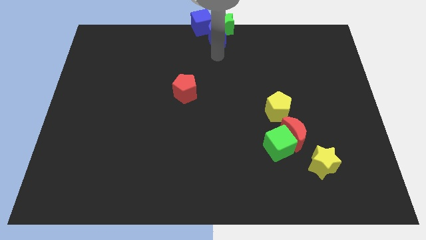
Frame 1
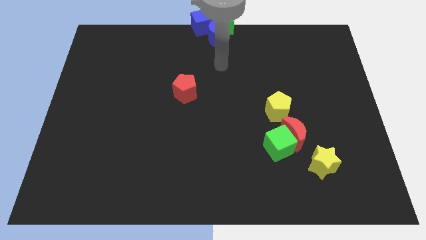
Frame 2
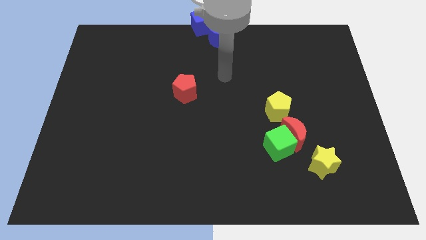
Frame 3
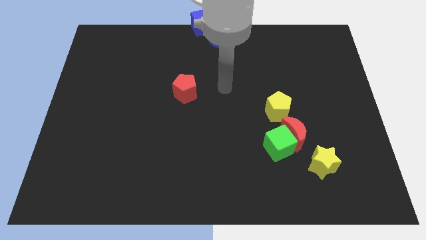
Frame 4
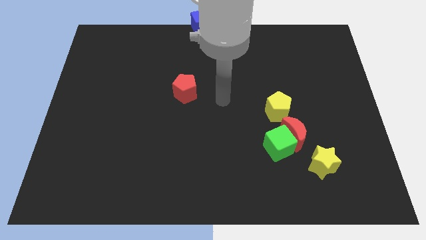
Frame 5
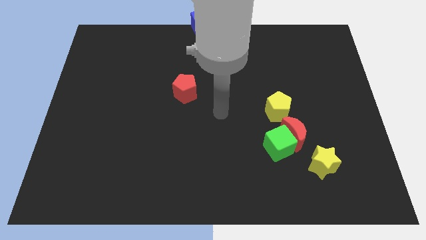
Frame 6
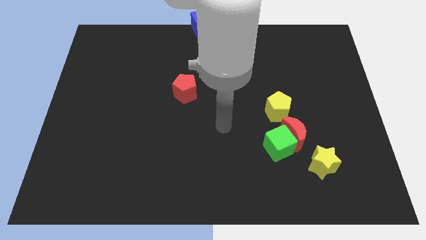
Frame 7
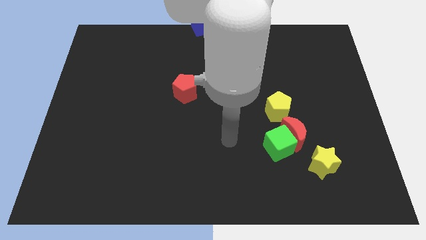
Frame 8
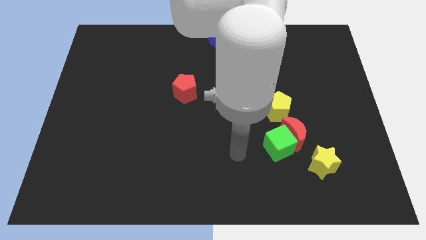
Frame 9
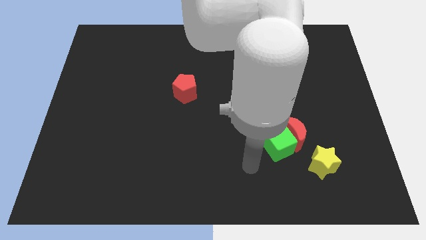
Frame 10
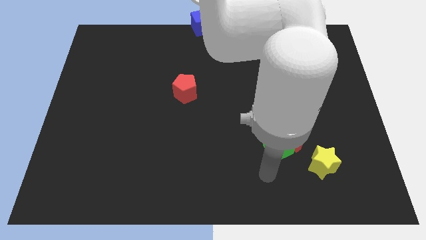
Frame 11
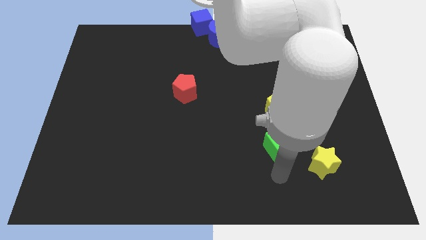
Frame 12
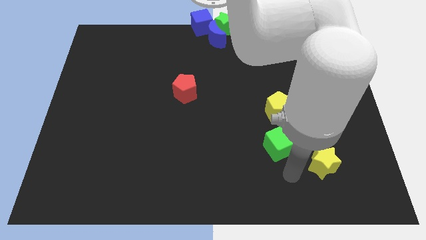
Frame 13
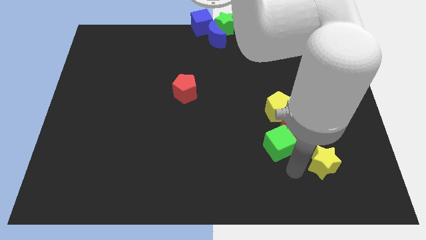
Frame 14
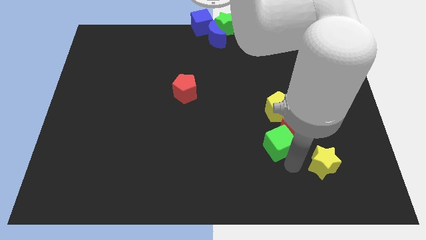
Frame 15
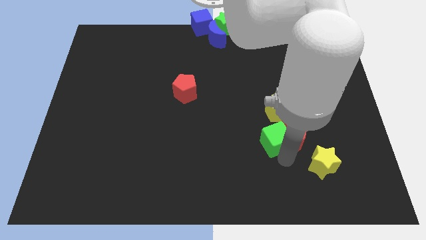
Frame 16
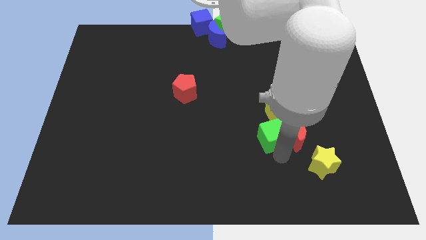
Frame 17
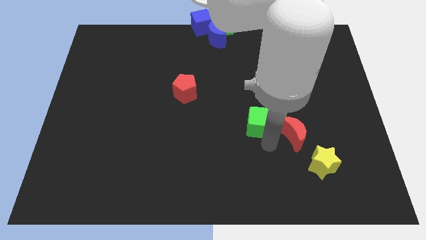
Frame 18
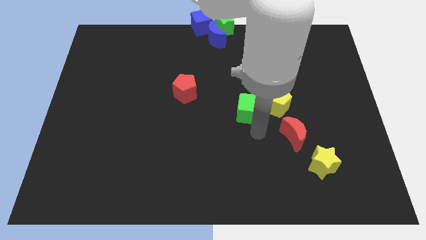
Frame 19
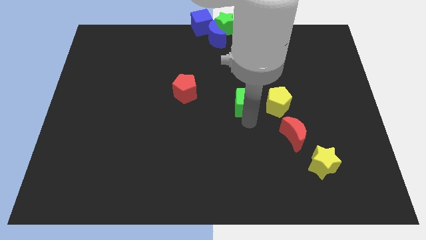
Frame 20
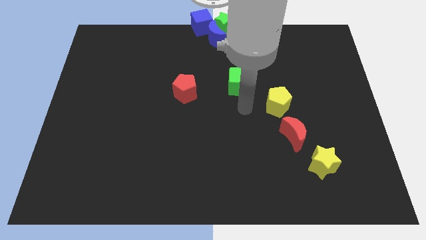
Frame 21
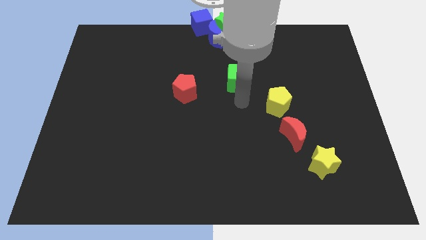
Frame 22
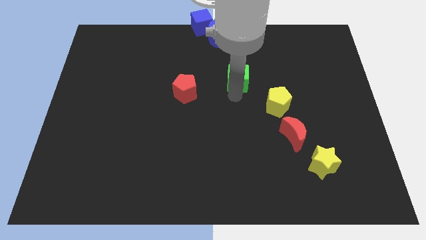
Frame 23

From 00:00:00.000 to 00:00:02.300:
place the green cube at right side of the red pentagon

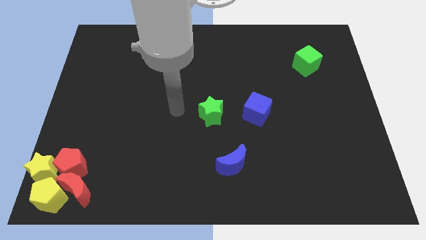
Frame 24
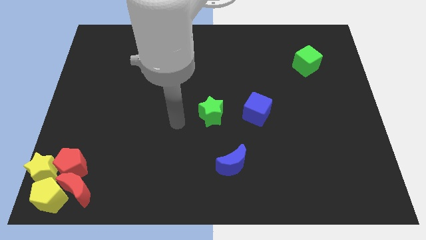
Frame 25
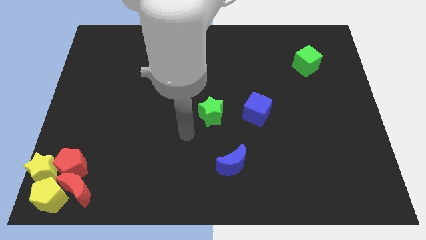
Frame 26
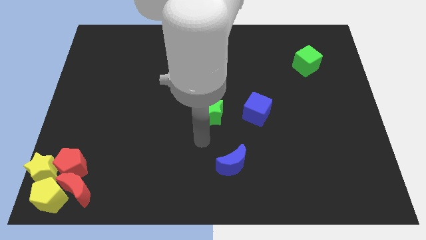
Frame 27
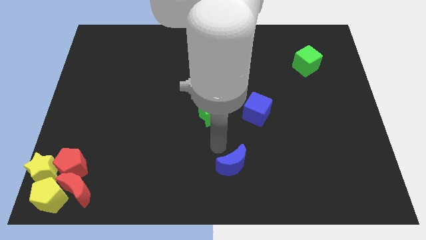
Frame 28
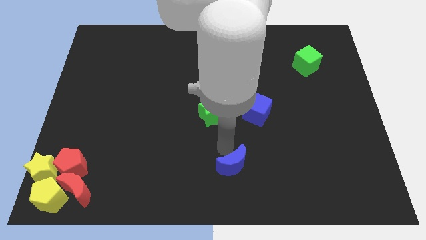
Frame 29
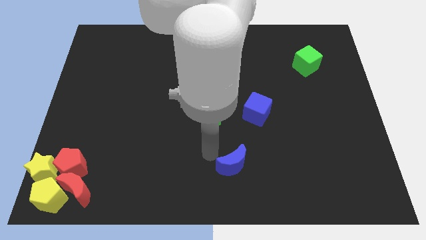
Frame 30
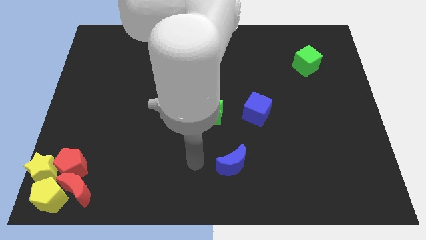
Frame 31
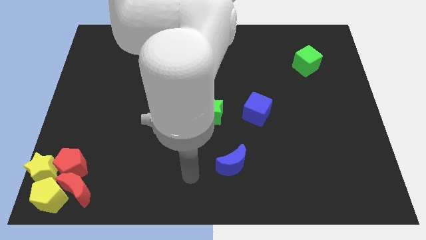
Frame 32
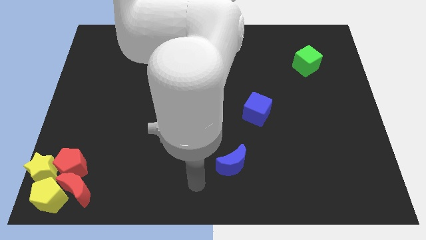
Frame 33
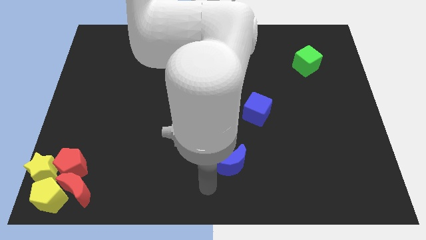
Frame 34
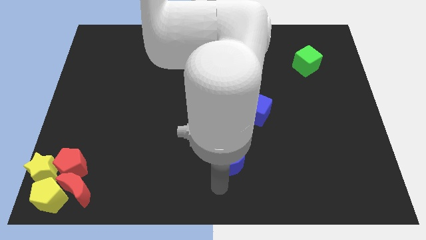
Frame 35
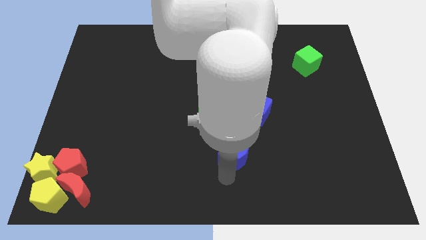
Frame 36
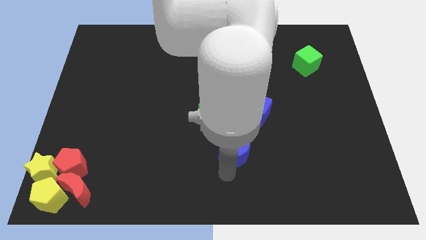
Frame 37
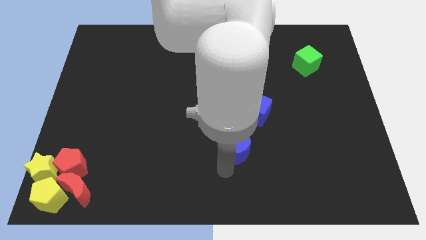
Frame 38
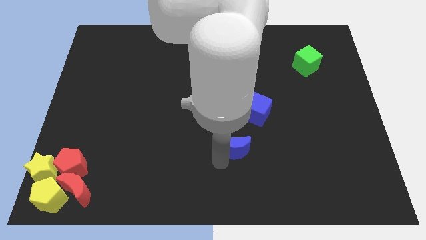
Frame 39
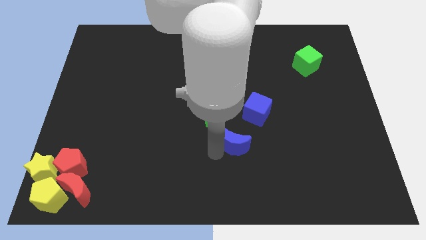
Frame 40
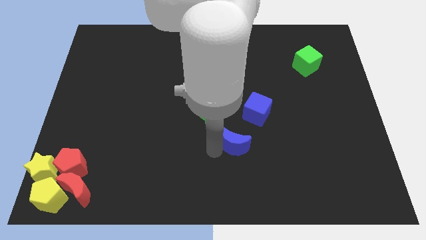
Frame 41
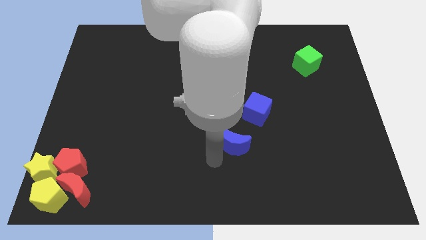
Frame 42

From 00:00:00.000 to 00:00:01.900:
push the blue moon slightly up

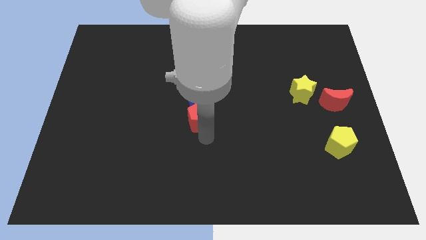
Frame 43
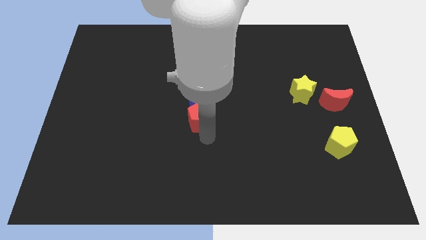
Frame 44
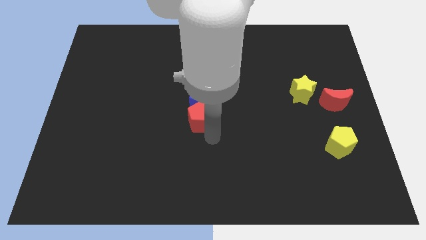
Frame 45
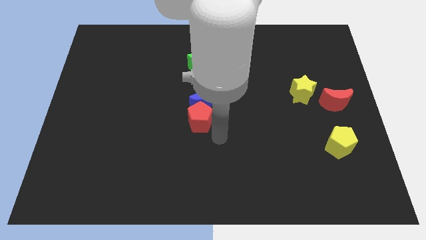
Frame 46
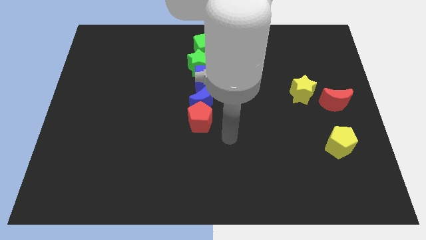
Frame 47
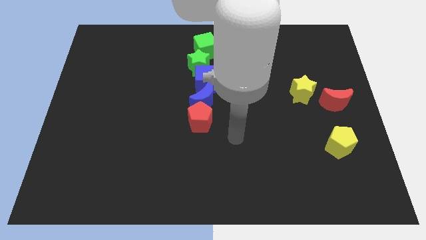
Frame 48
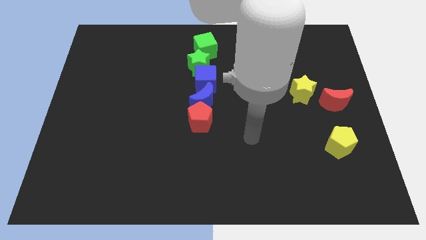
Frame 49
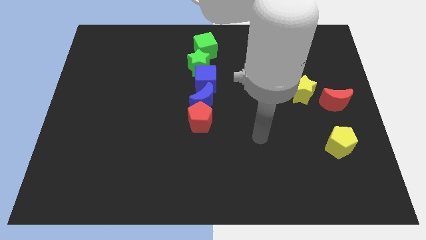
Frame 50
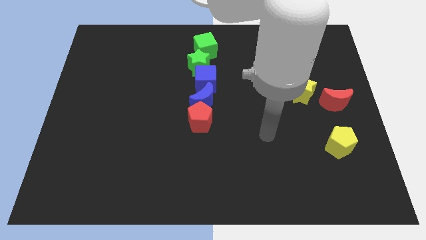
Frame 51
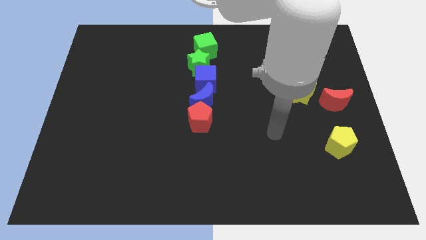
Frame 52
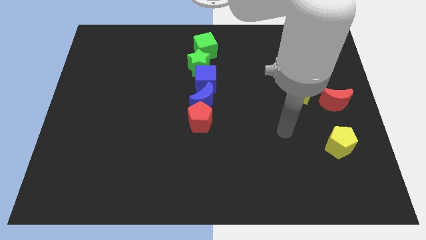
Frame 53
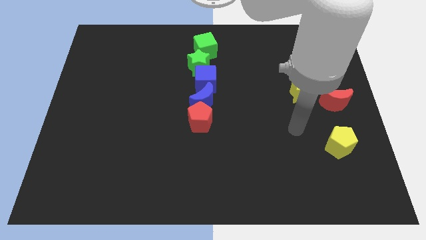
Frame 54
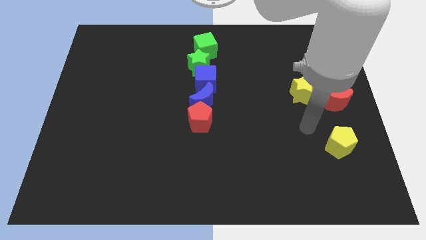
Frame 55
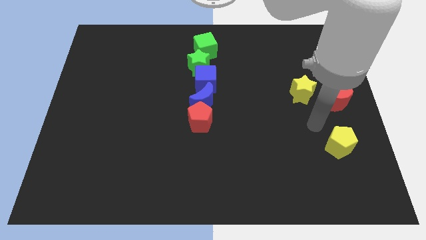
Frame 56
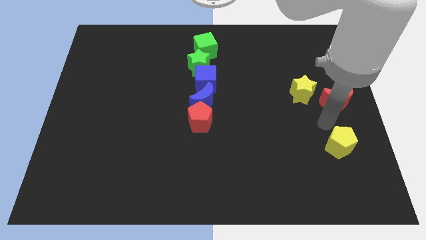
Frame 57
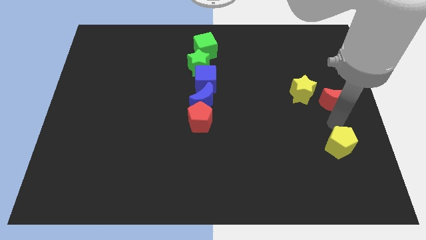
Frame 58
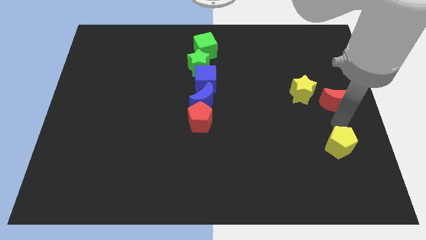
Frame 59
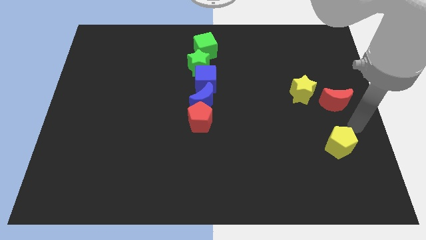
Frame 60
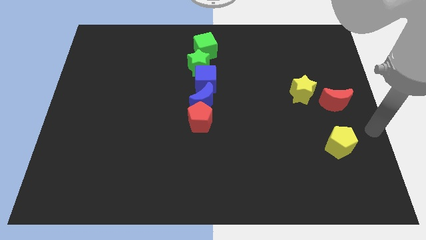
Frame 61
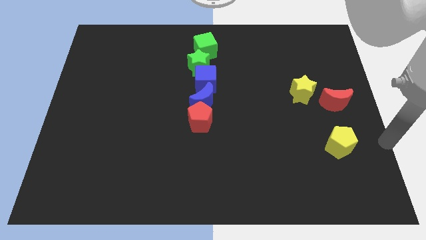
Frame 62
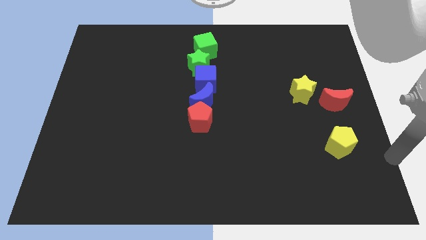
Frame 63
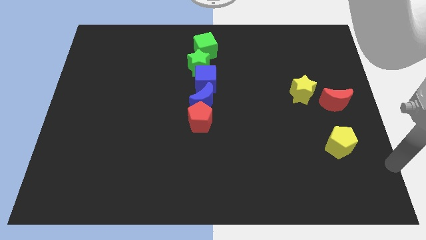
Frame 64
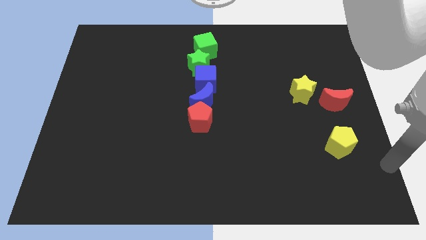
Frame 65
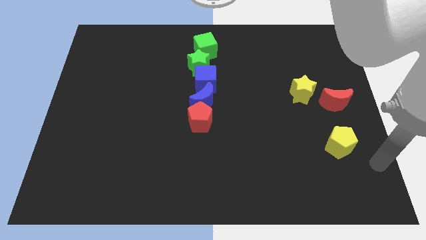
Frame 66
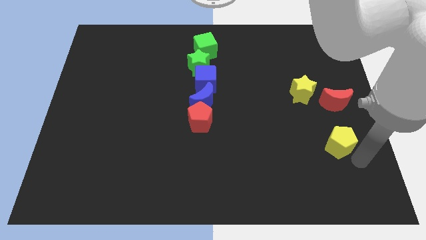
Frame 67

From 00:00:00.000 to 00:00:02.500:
move away from the red pentagon

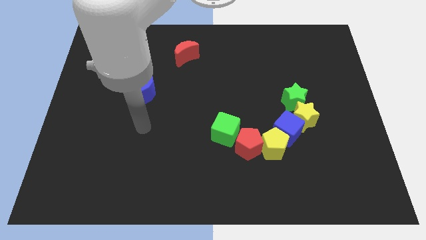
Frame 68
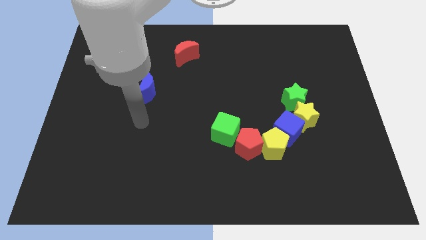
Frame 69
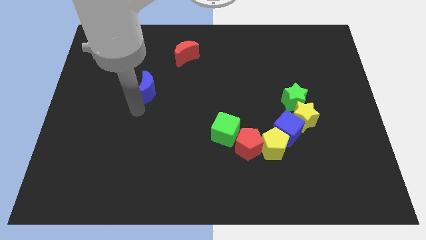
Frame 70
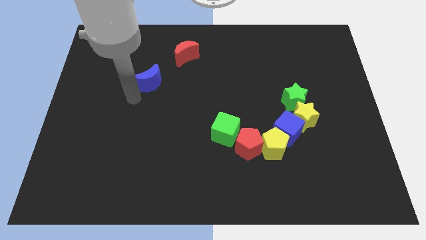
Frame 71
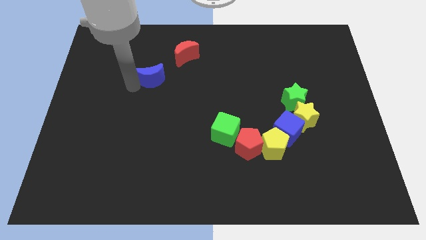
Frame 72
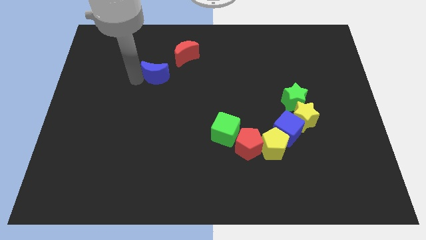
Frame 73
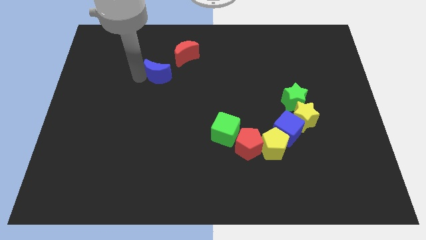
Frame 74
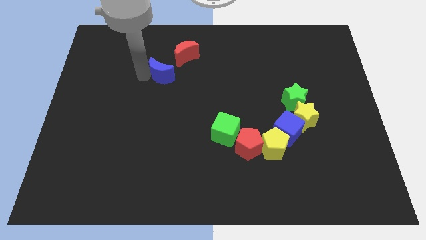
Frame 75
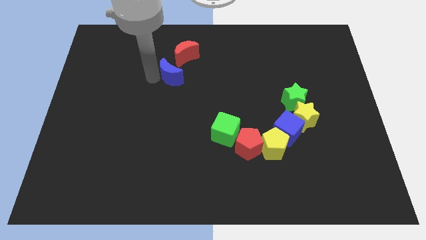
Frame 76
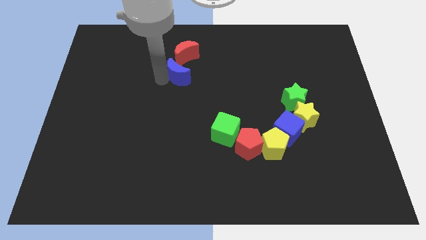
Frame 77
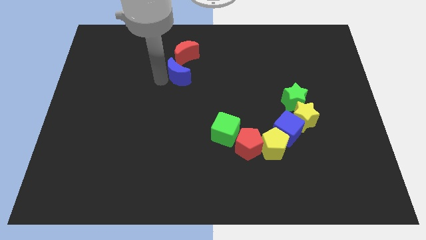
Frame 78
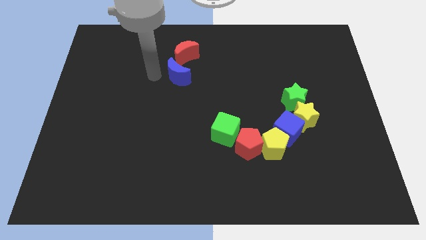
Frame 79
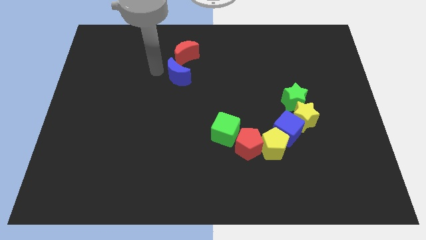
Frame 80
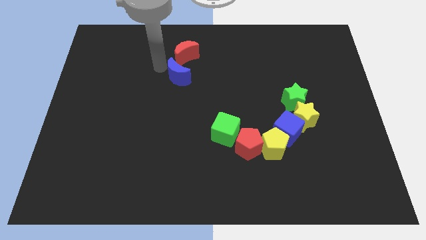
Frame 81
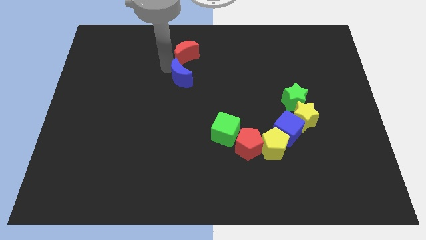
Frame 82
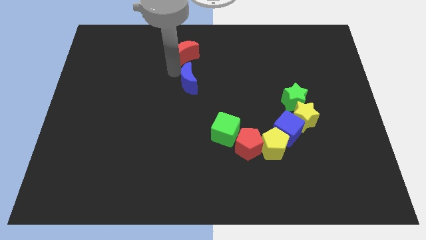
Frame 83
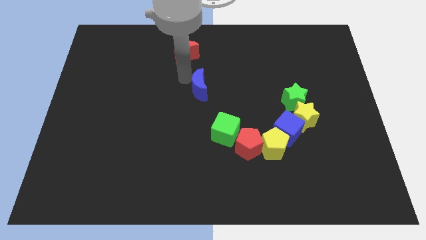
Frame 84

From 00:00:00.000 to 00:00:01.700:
move the blue crescent below the red crescent

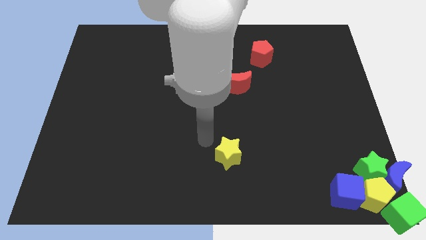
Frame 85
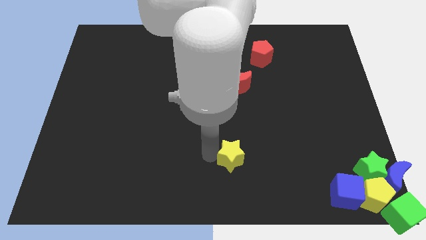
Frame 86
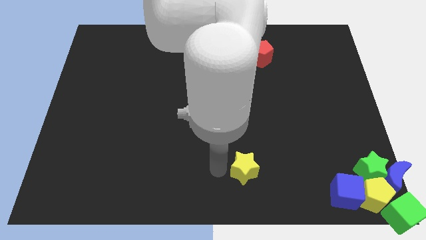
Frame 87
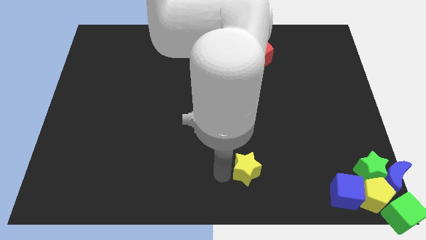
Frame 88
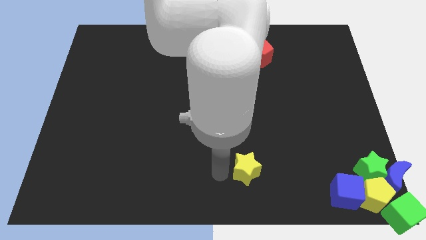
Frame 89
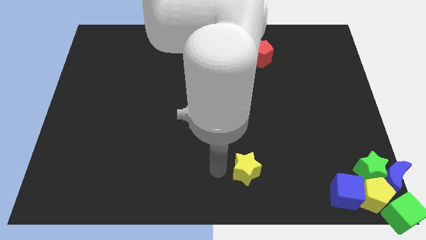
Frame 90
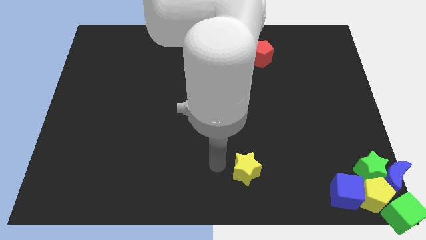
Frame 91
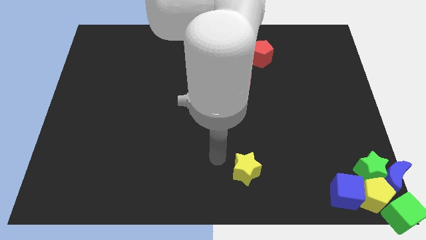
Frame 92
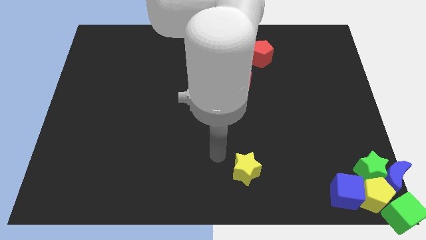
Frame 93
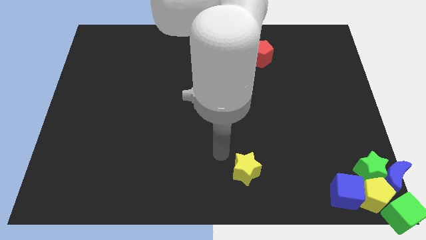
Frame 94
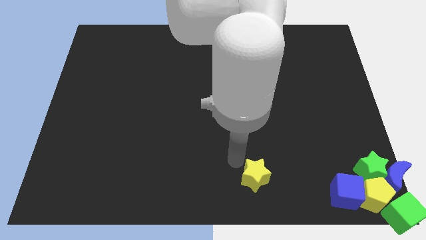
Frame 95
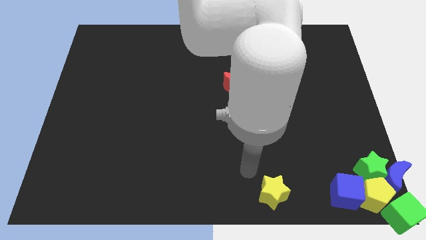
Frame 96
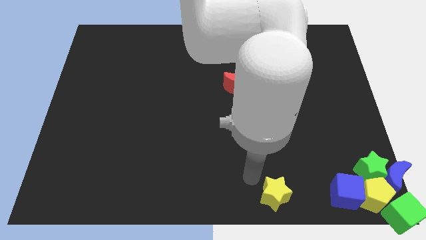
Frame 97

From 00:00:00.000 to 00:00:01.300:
move the yellow star to the left of the blue cube
